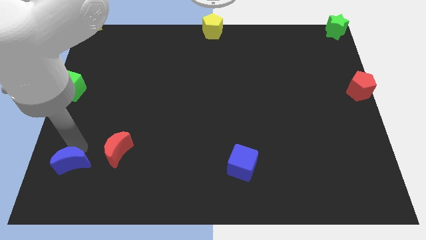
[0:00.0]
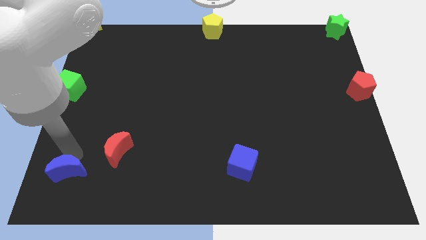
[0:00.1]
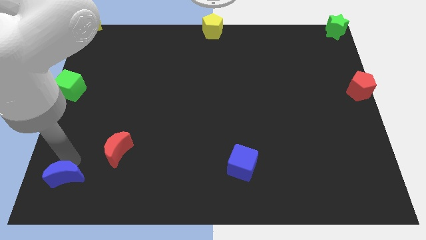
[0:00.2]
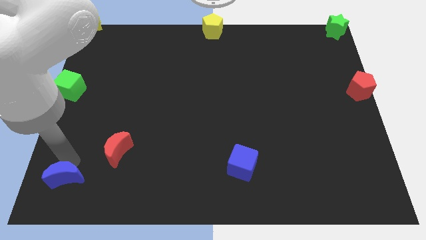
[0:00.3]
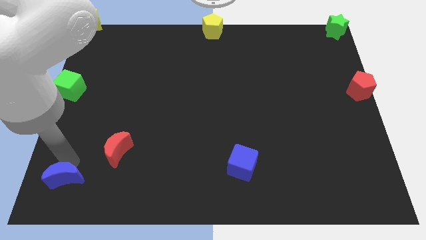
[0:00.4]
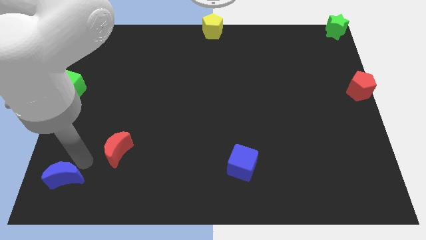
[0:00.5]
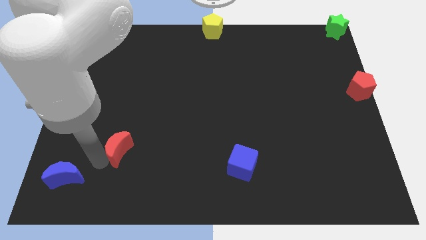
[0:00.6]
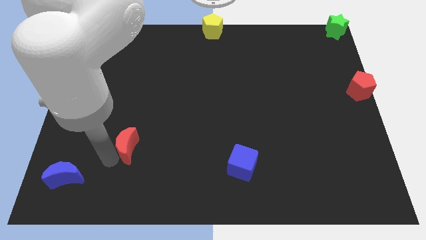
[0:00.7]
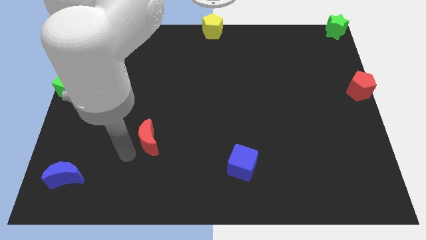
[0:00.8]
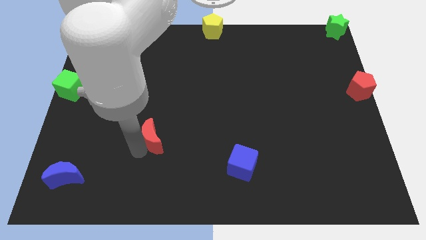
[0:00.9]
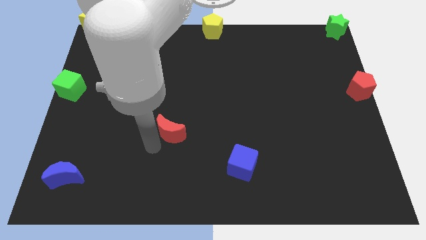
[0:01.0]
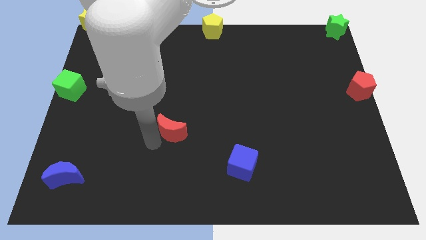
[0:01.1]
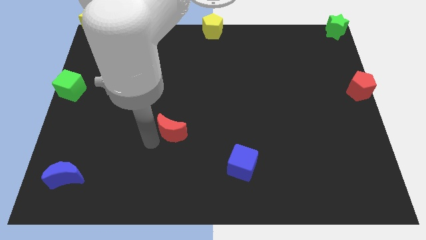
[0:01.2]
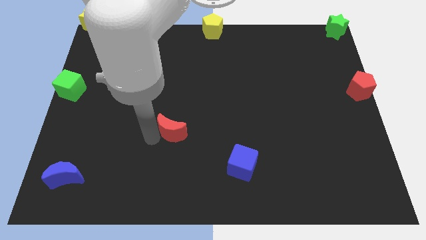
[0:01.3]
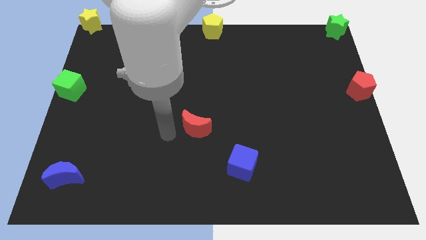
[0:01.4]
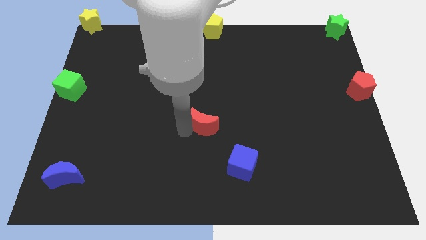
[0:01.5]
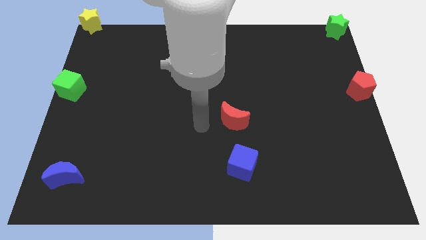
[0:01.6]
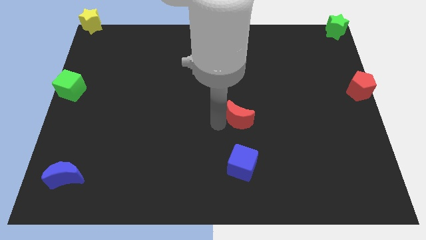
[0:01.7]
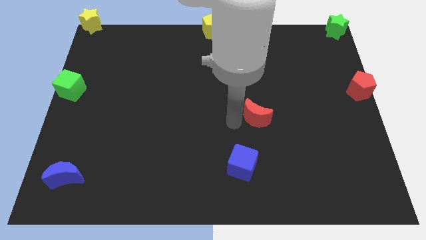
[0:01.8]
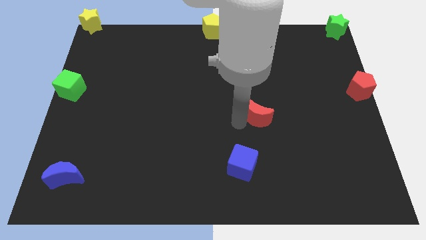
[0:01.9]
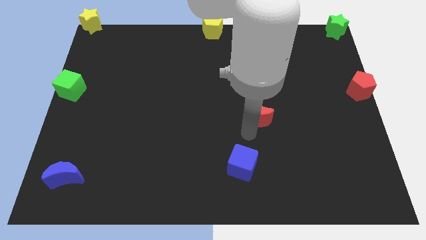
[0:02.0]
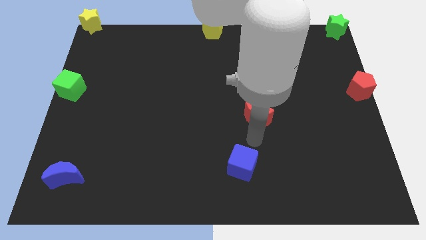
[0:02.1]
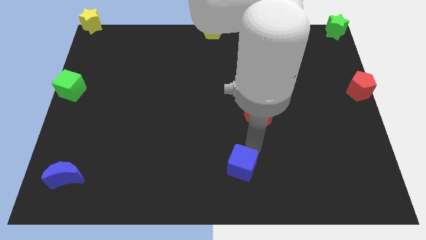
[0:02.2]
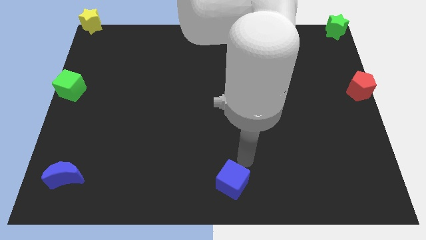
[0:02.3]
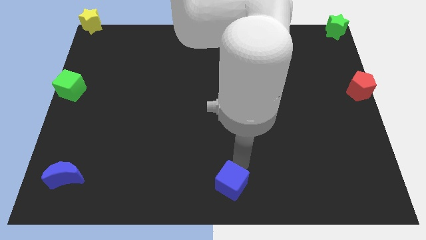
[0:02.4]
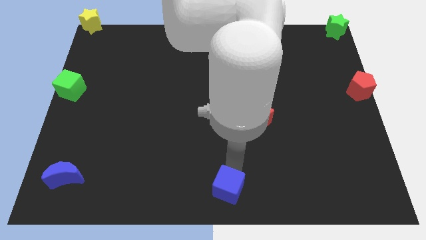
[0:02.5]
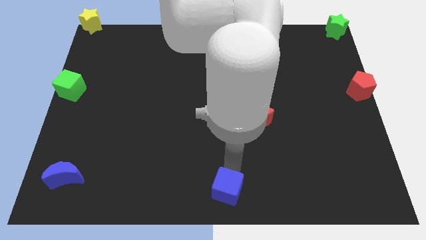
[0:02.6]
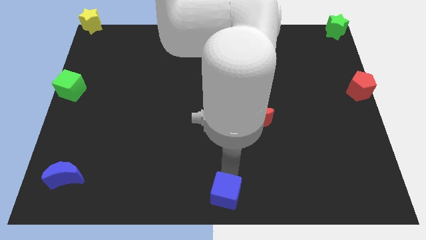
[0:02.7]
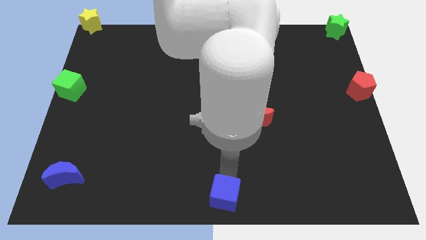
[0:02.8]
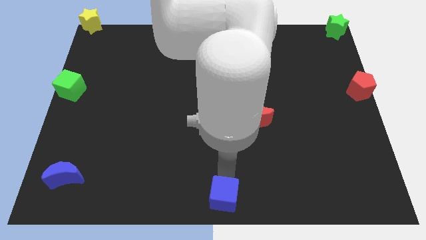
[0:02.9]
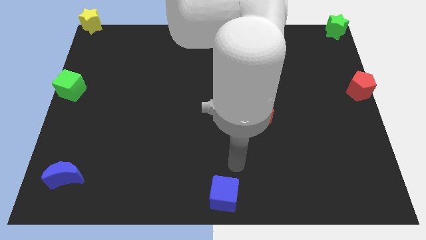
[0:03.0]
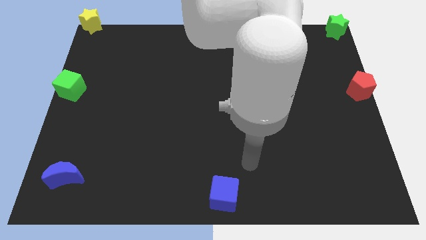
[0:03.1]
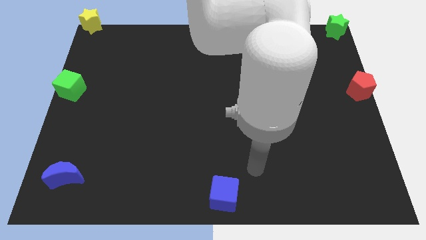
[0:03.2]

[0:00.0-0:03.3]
place the blue cube to the bottom middle of the board

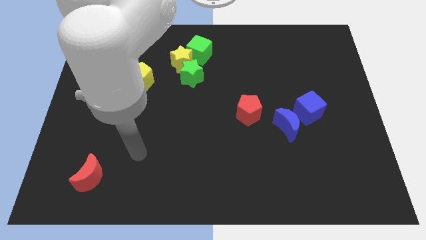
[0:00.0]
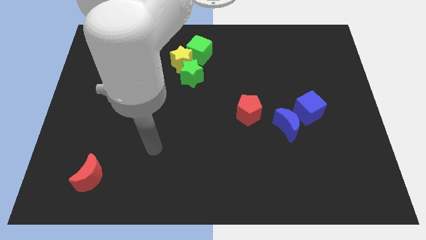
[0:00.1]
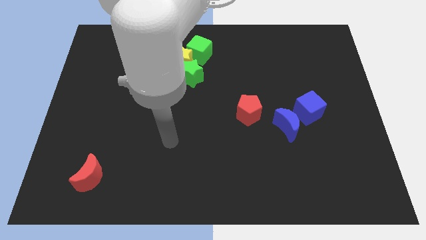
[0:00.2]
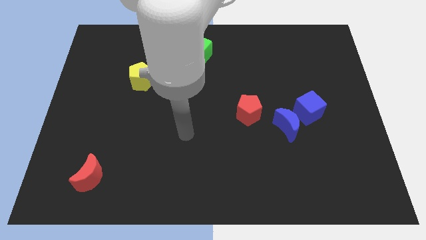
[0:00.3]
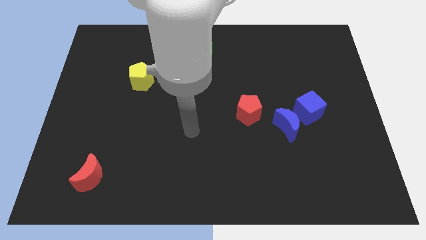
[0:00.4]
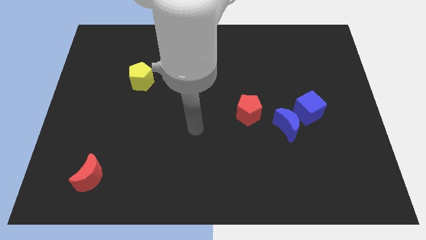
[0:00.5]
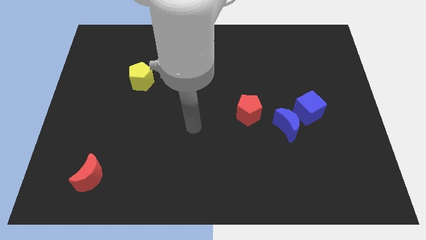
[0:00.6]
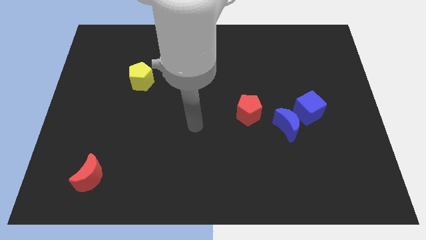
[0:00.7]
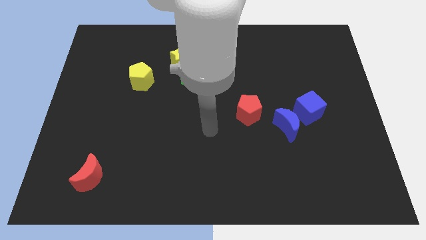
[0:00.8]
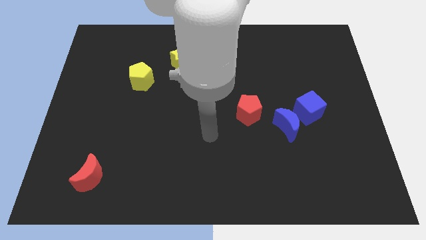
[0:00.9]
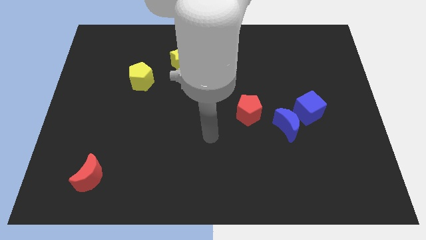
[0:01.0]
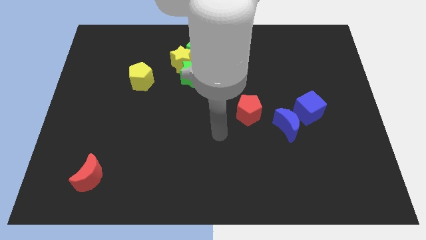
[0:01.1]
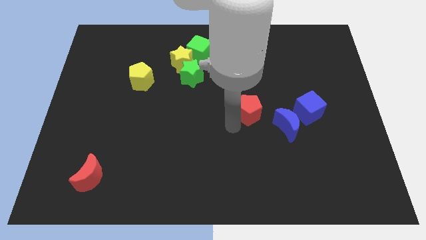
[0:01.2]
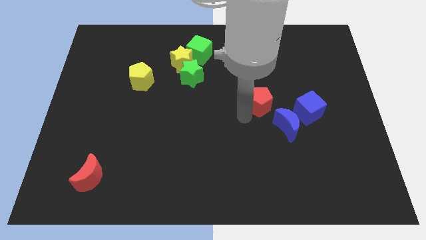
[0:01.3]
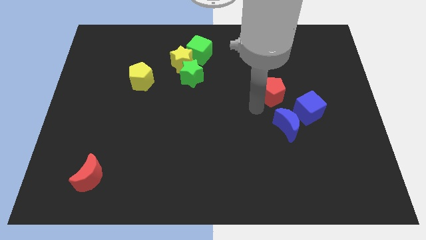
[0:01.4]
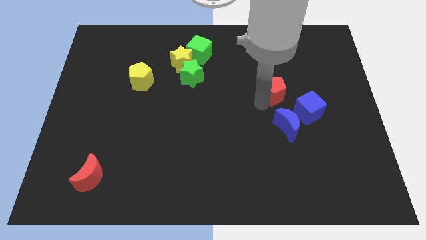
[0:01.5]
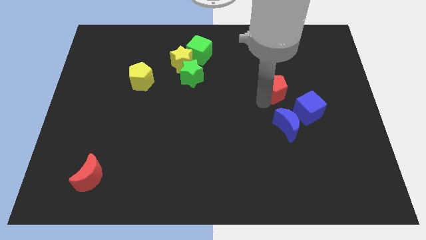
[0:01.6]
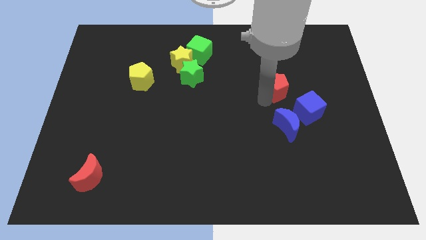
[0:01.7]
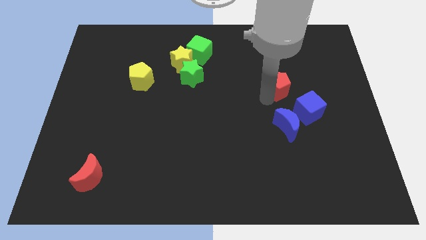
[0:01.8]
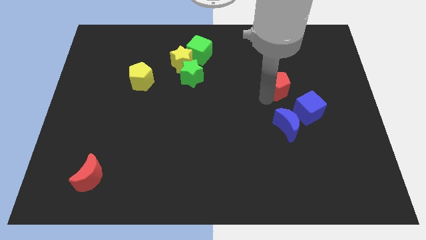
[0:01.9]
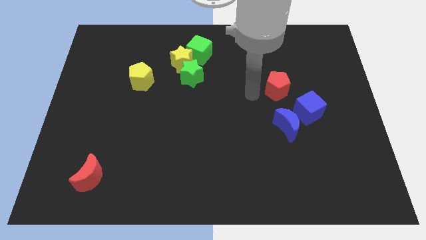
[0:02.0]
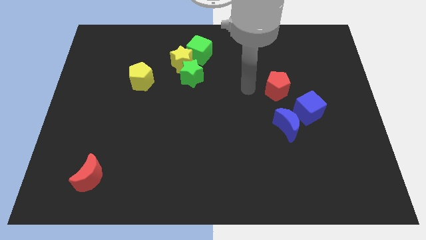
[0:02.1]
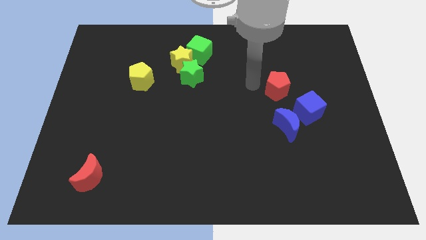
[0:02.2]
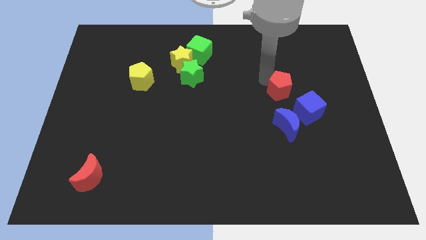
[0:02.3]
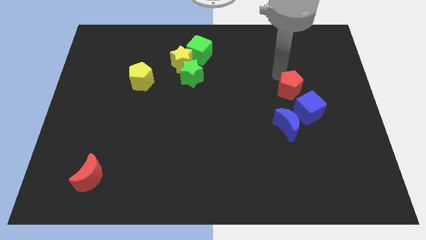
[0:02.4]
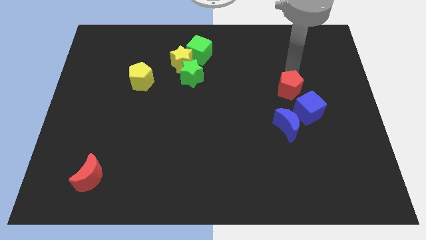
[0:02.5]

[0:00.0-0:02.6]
move the red pentagon towards the top

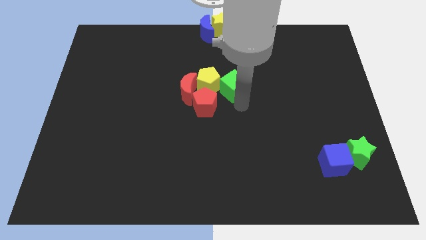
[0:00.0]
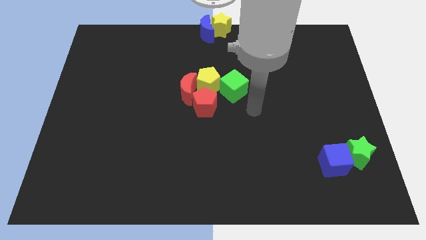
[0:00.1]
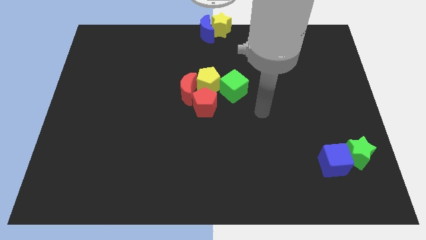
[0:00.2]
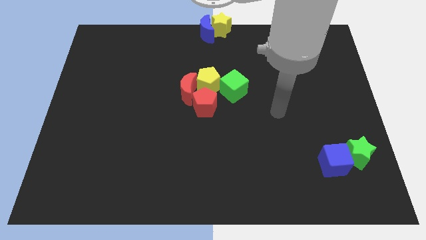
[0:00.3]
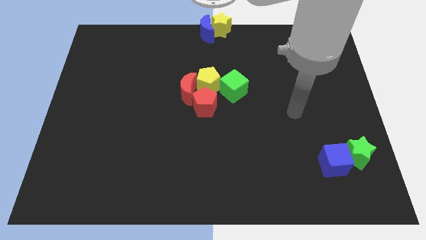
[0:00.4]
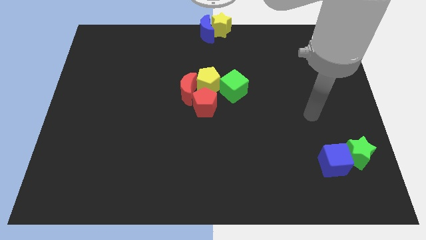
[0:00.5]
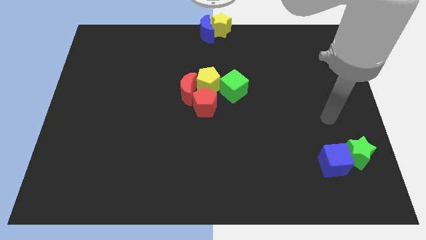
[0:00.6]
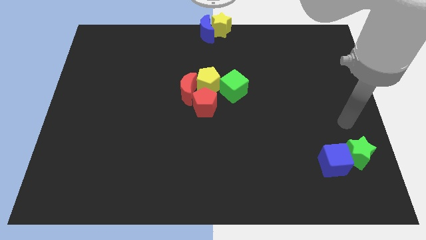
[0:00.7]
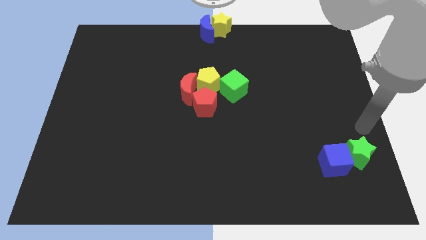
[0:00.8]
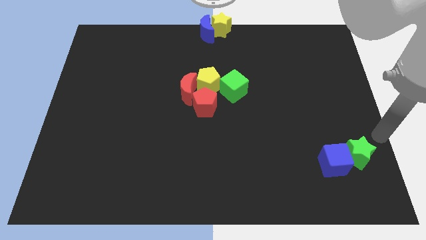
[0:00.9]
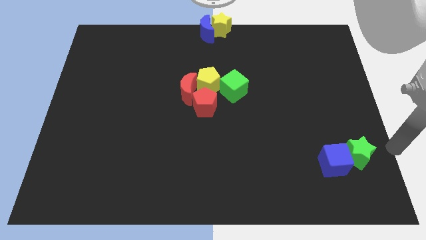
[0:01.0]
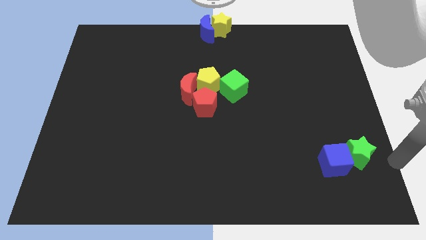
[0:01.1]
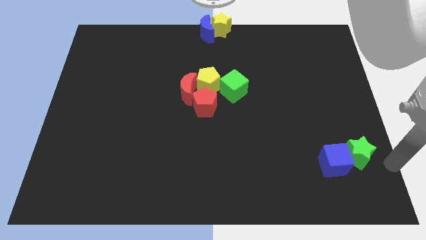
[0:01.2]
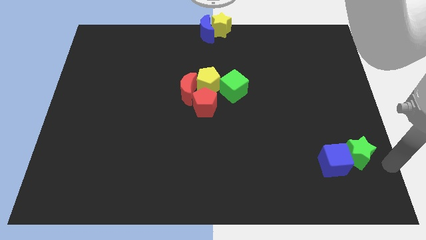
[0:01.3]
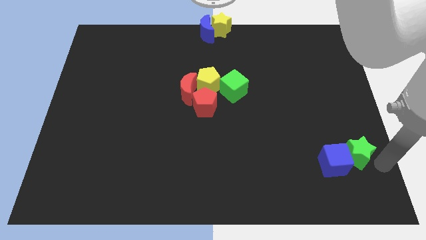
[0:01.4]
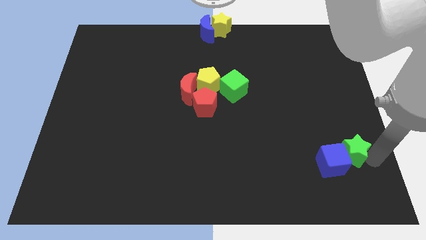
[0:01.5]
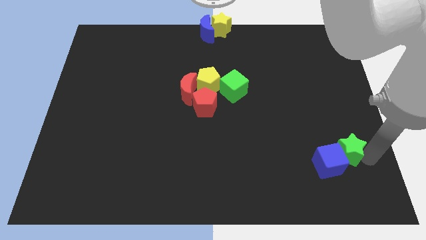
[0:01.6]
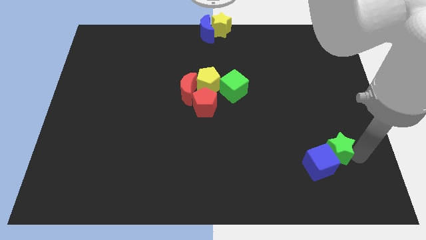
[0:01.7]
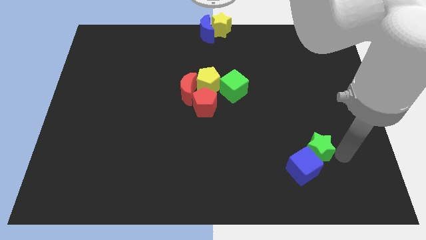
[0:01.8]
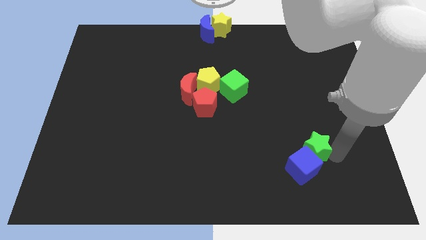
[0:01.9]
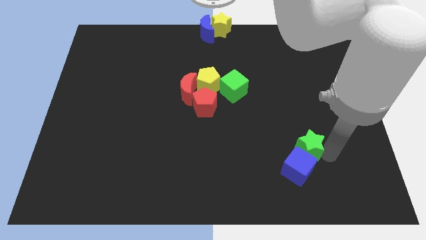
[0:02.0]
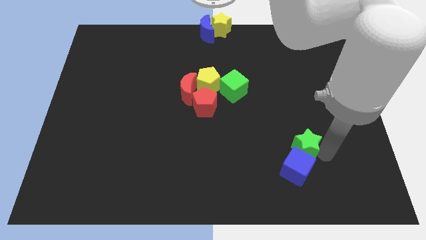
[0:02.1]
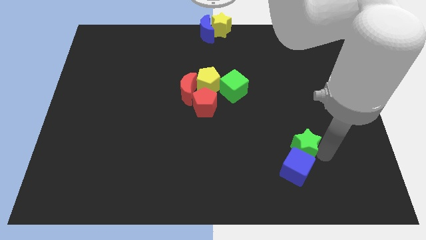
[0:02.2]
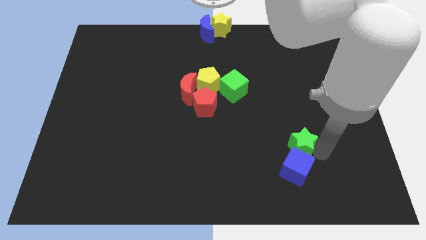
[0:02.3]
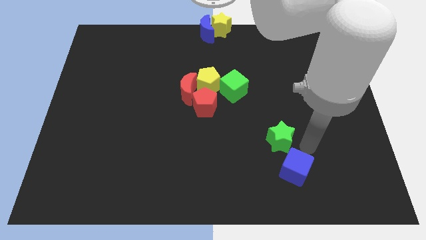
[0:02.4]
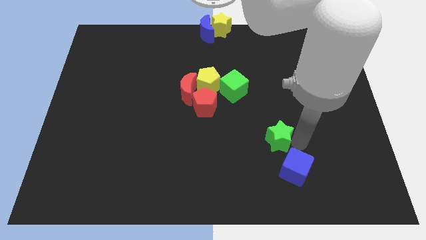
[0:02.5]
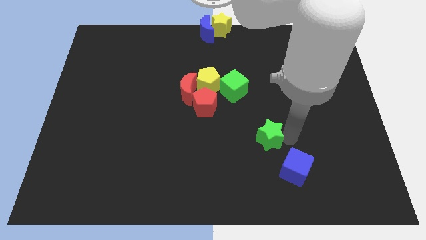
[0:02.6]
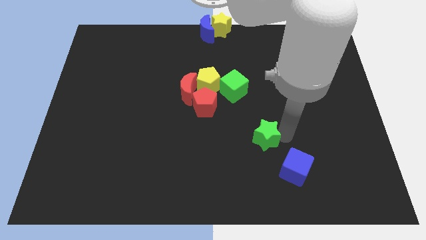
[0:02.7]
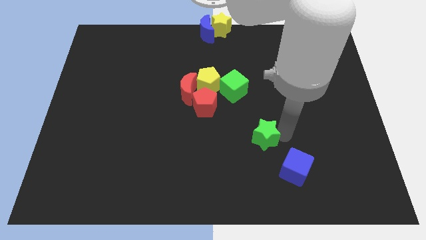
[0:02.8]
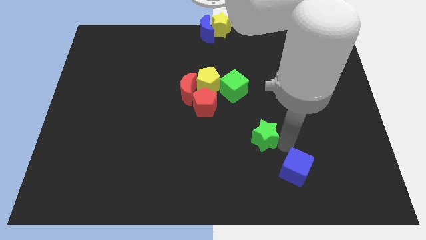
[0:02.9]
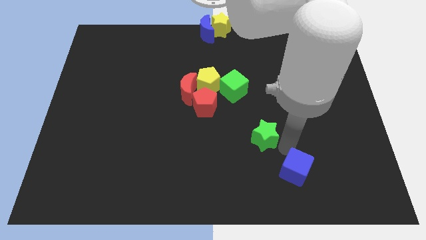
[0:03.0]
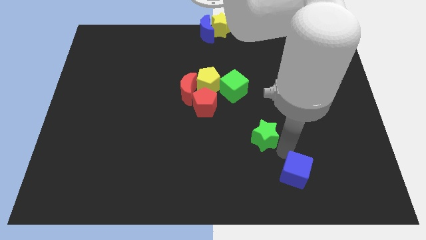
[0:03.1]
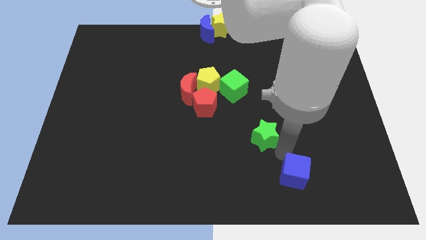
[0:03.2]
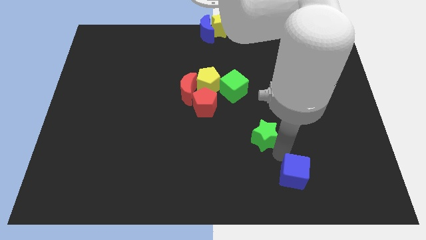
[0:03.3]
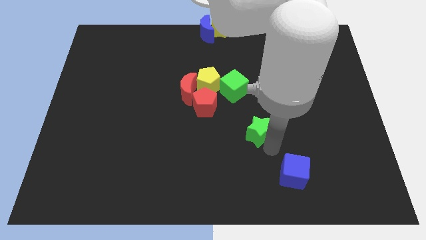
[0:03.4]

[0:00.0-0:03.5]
separate the green star from the blue cube
